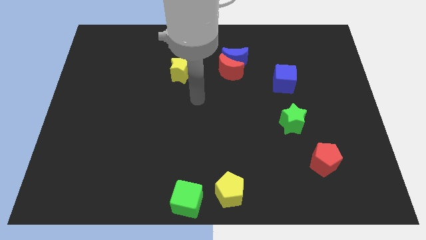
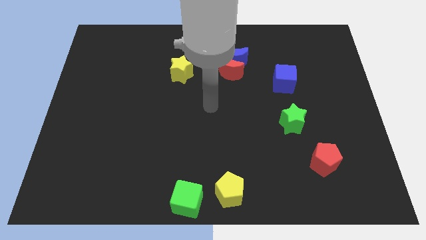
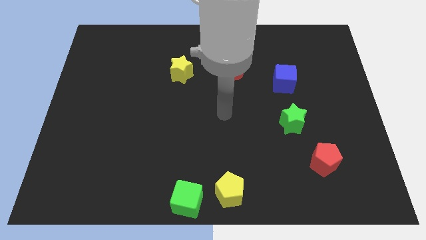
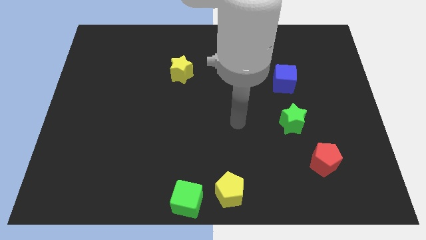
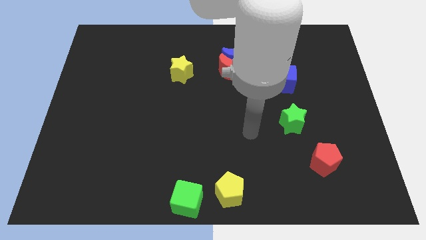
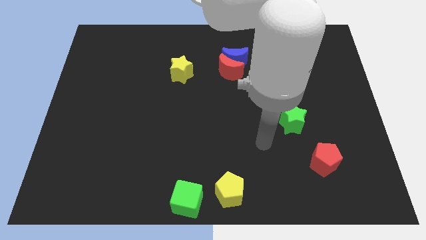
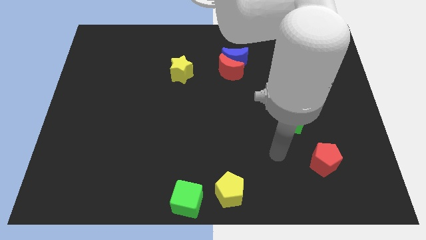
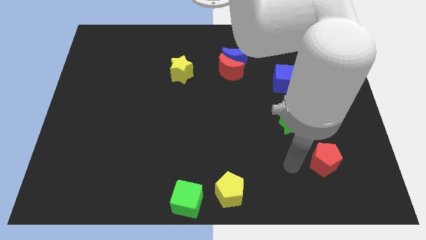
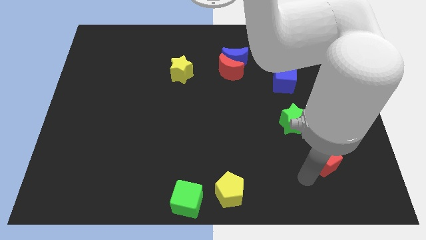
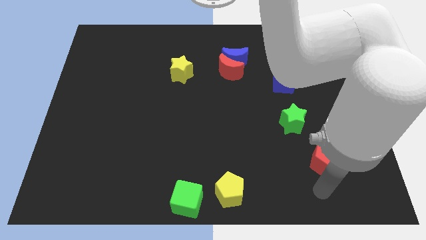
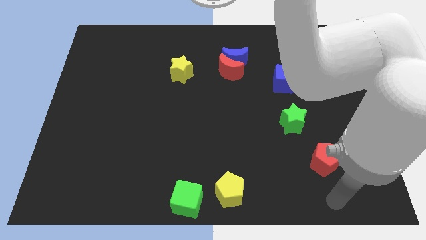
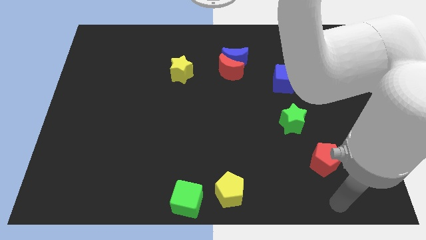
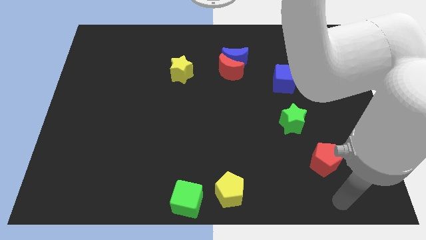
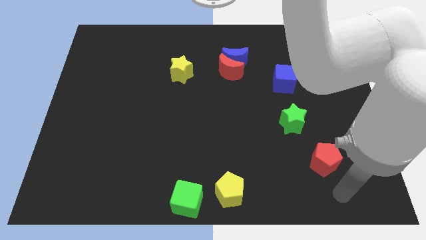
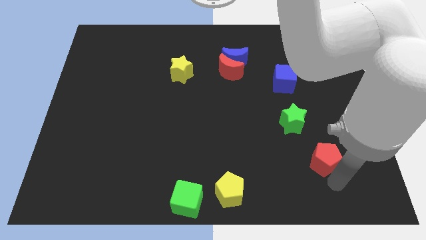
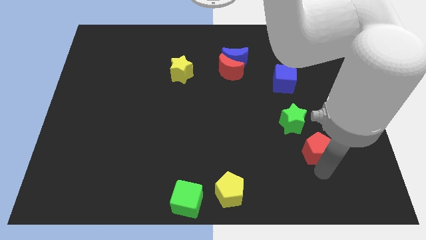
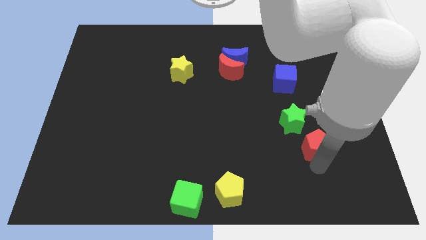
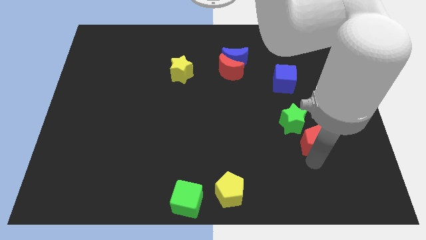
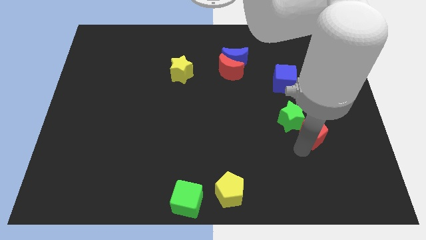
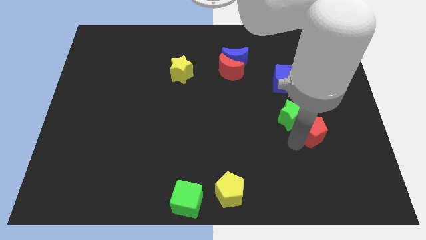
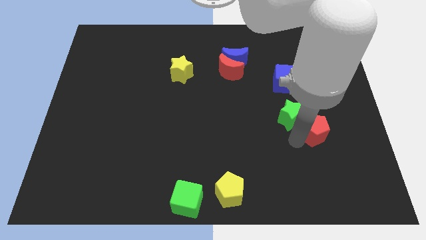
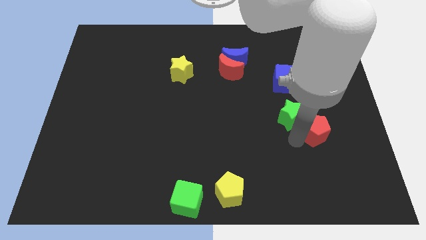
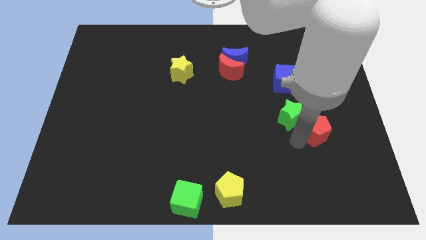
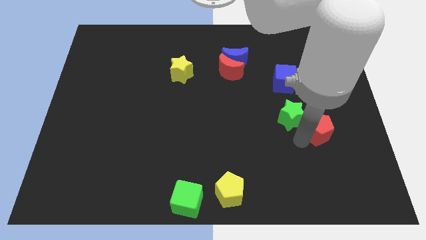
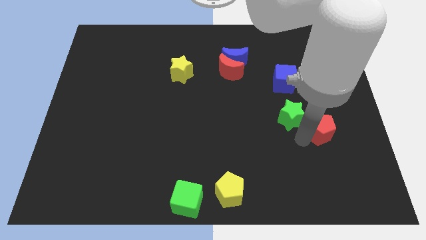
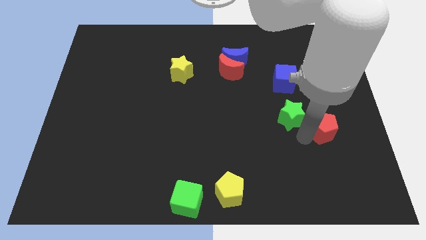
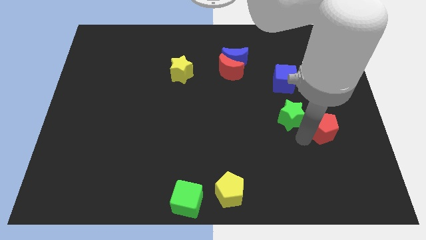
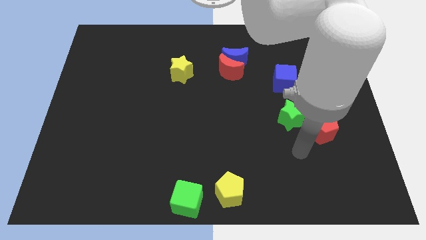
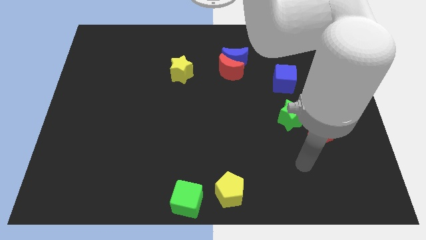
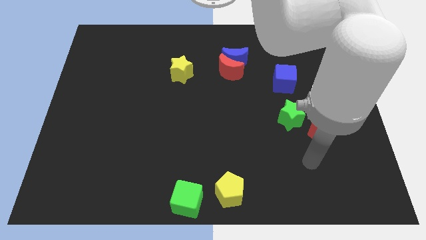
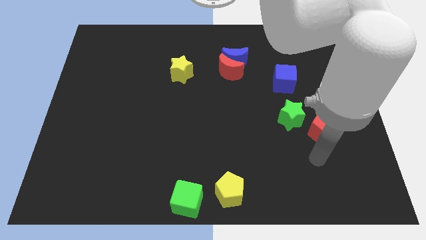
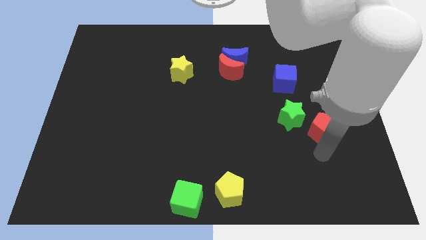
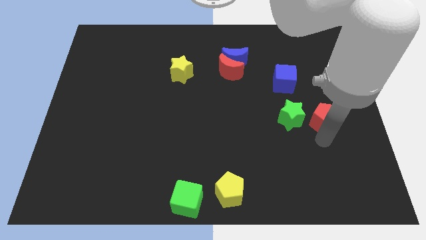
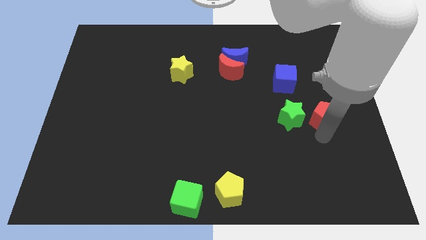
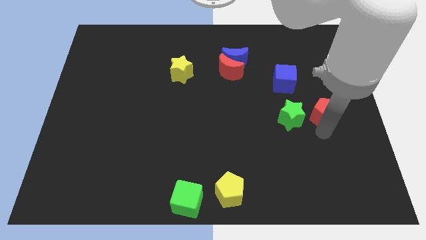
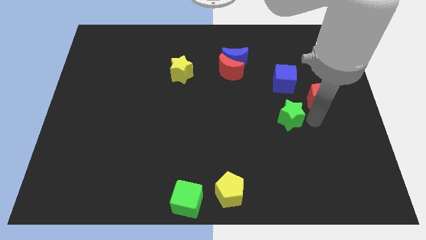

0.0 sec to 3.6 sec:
place the red pentagon right to the green star

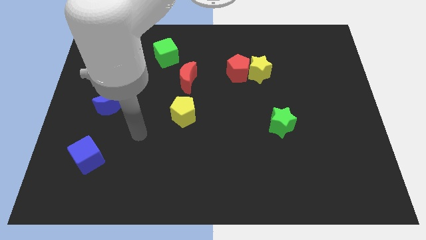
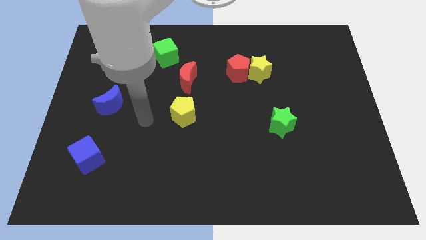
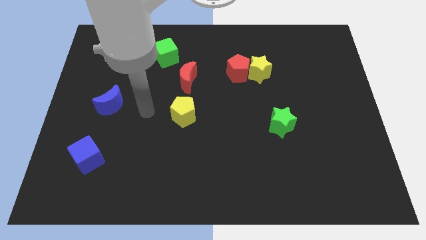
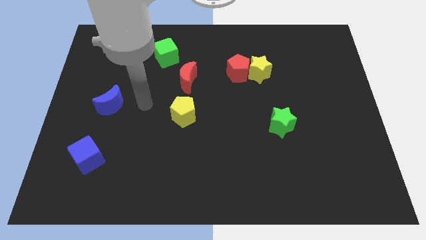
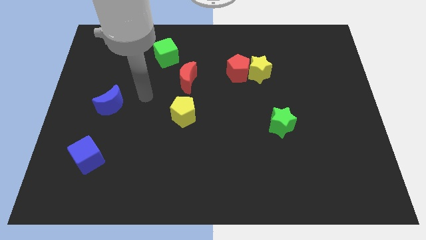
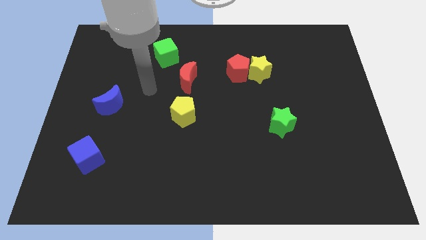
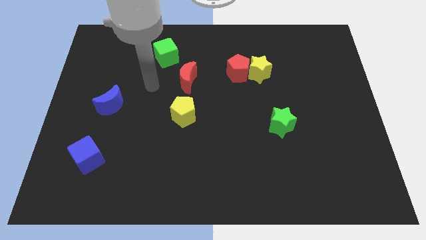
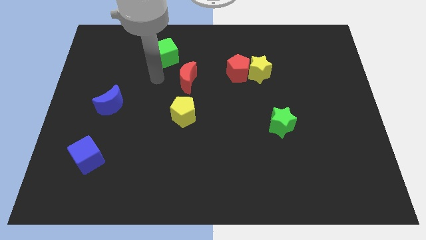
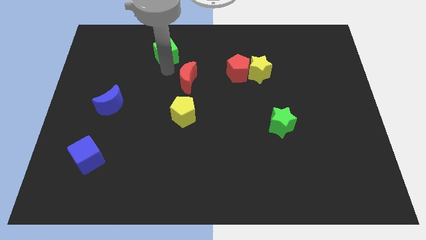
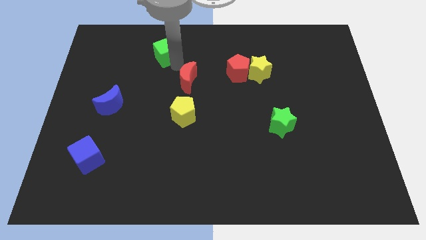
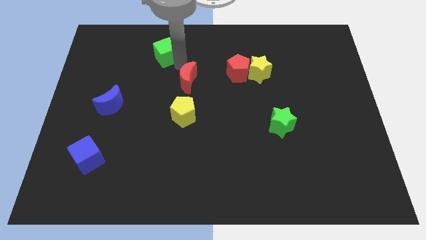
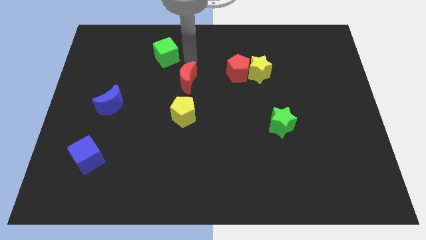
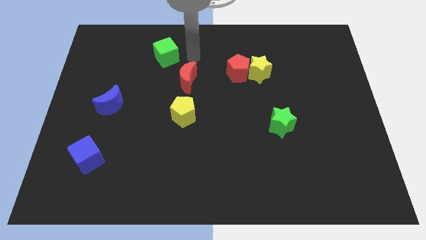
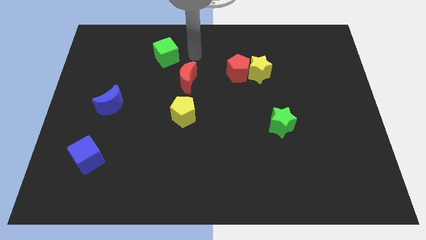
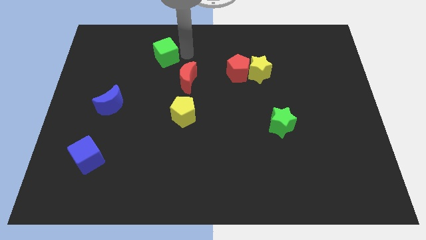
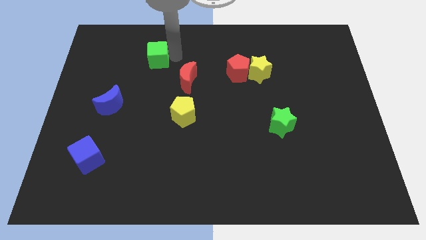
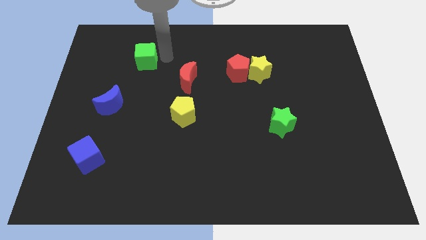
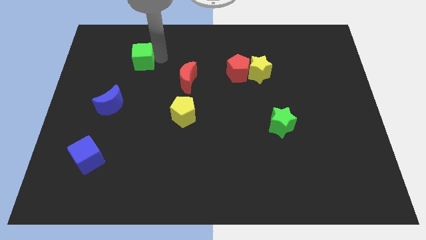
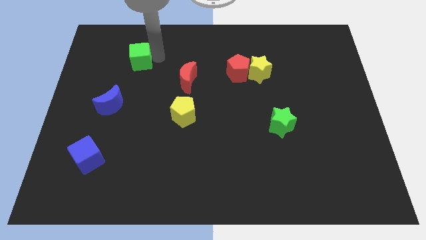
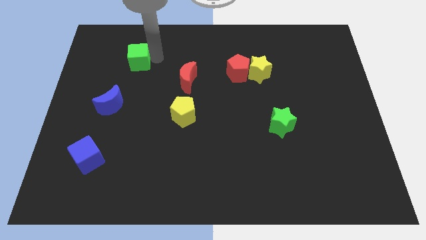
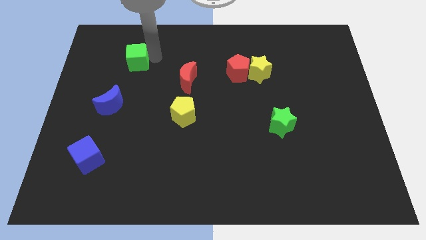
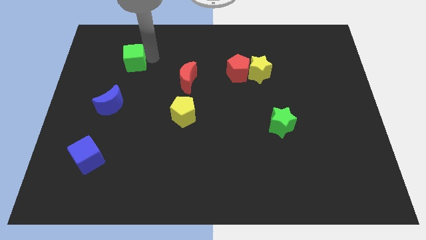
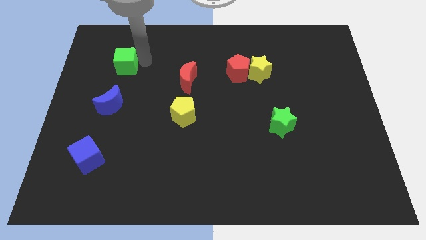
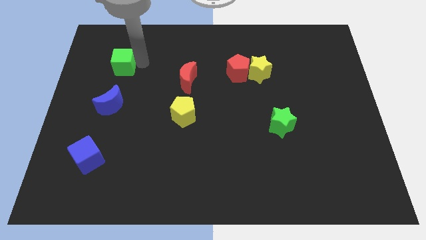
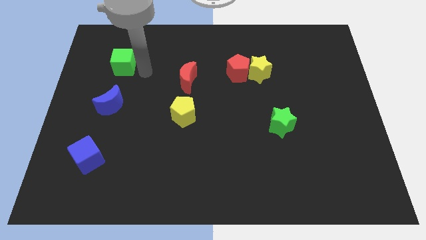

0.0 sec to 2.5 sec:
push the green block to its left

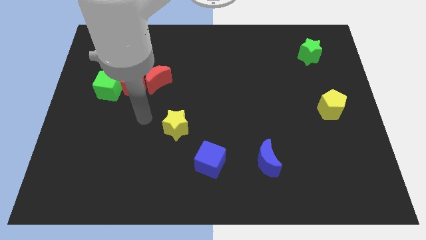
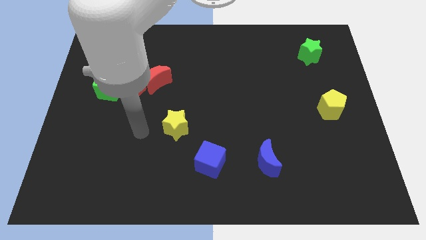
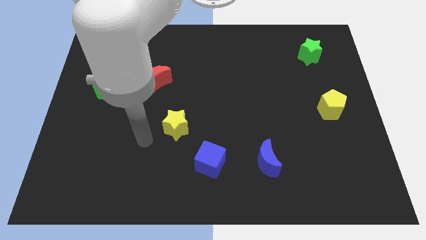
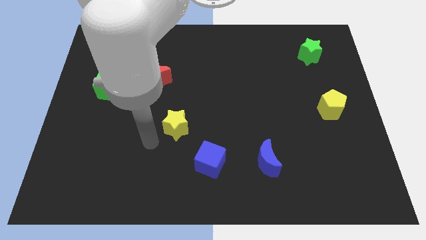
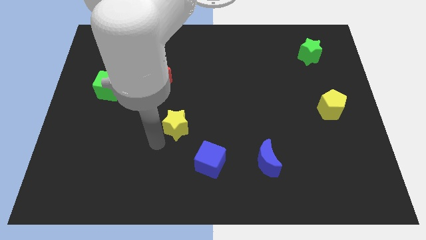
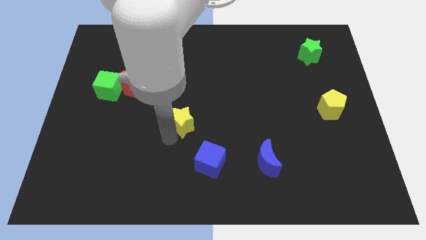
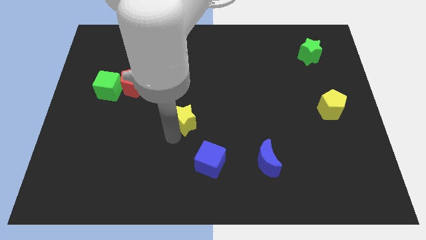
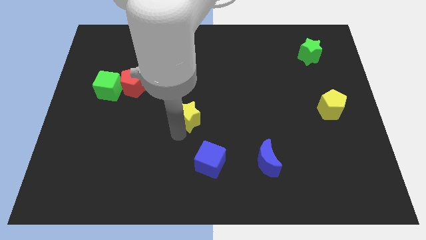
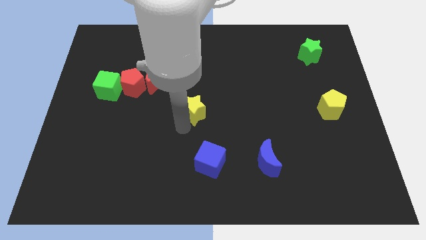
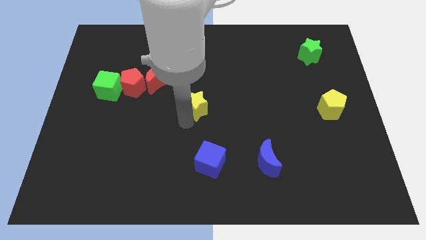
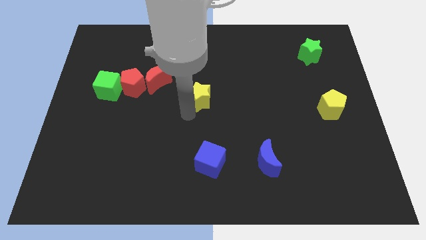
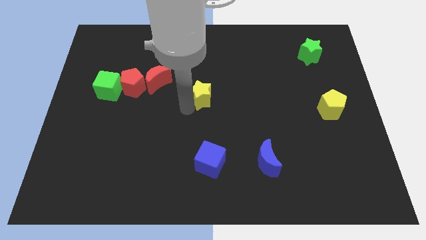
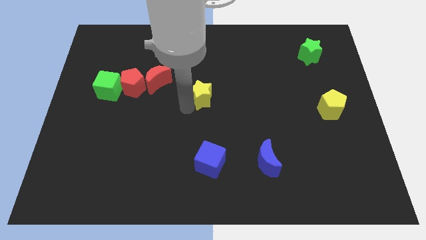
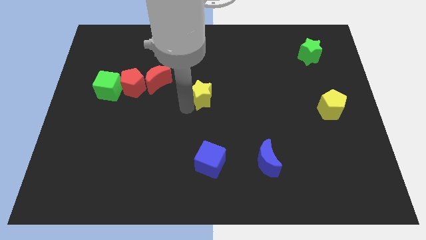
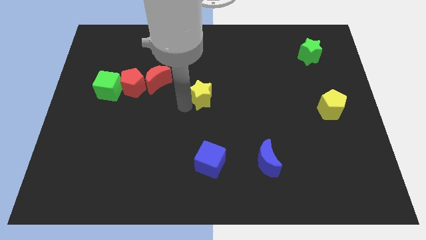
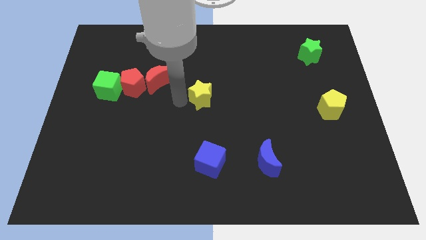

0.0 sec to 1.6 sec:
move the yellow star above the blue cube

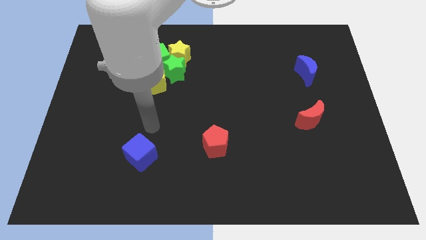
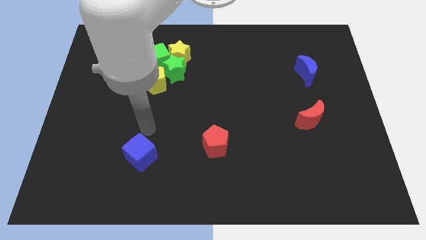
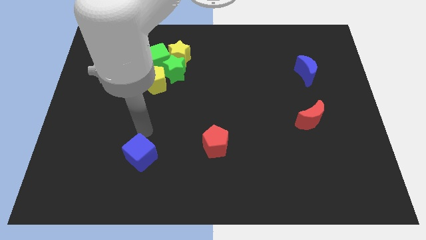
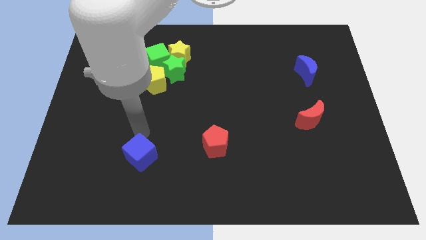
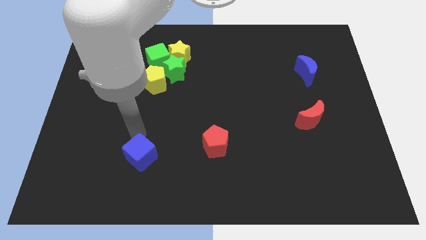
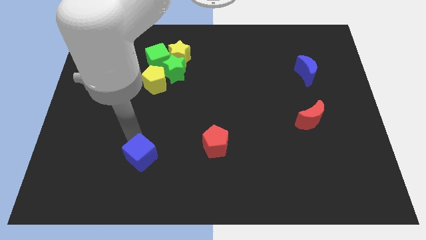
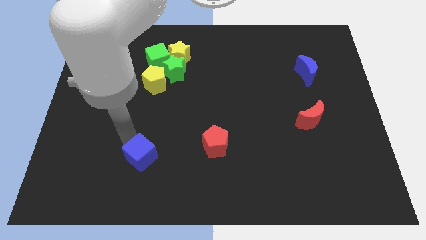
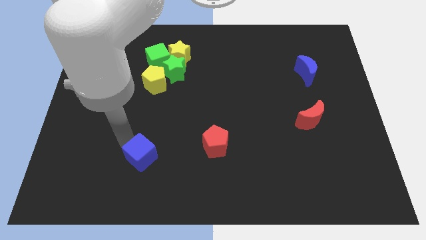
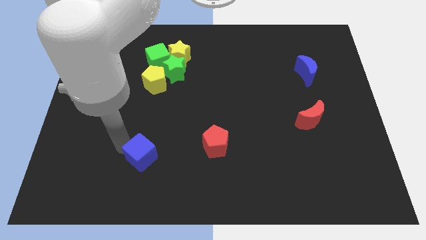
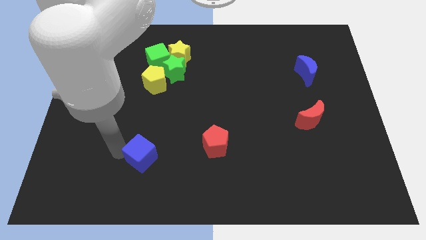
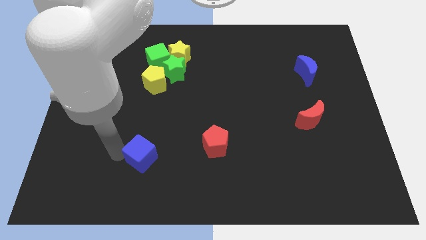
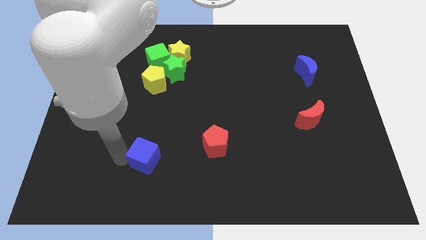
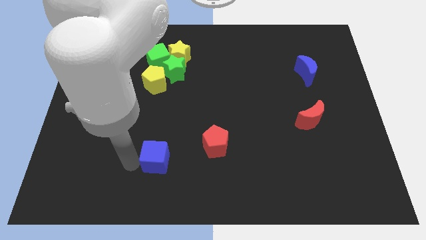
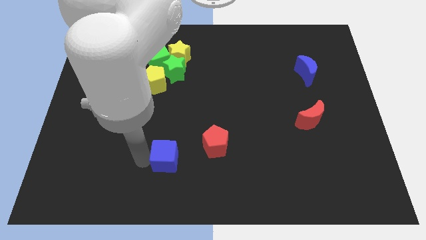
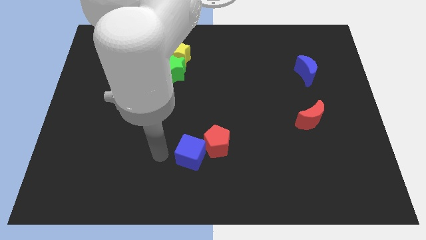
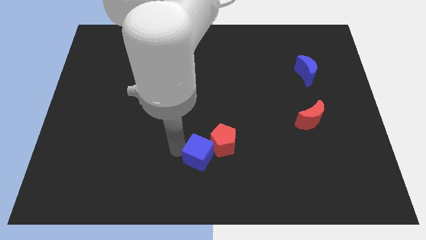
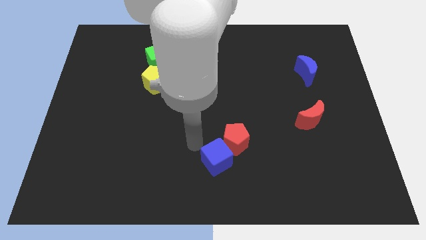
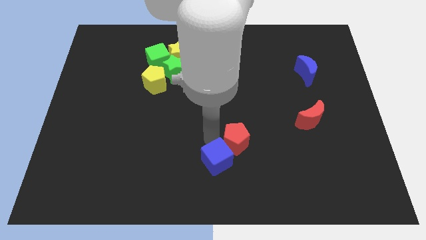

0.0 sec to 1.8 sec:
push the blue cube into the bottom left of the red pentagon
